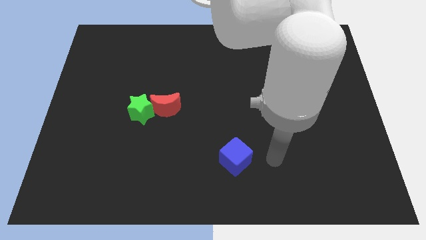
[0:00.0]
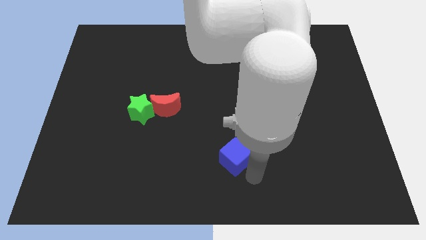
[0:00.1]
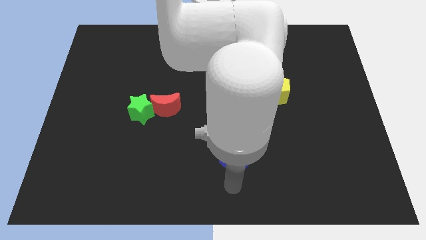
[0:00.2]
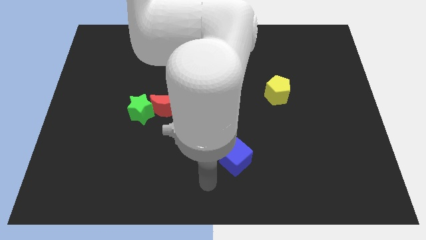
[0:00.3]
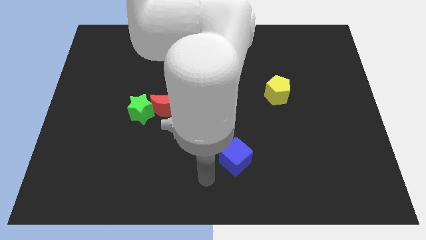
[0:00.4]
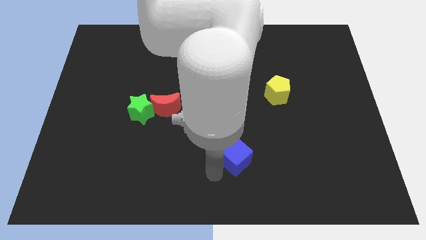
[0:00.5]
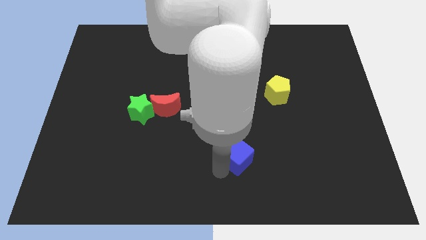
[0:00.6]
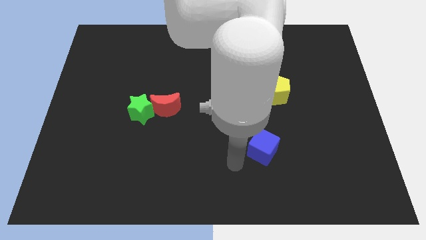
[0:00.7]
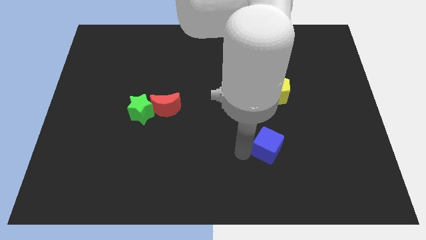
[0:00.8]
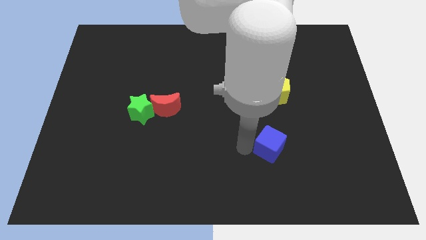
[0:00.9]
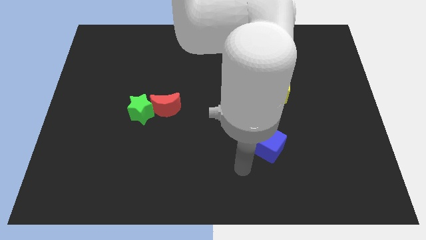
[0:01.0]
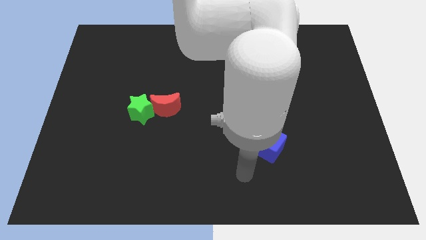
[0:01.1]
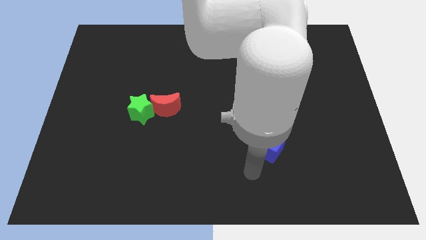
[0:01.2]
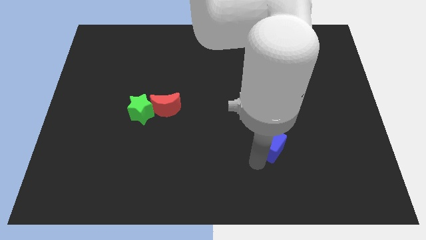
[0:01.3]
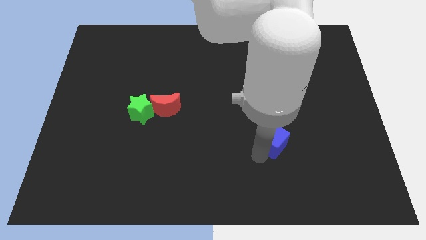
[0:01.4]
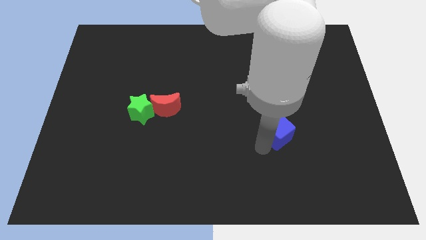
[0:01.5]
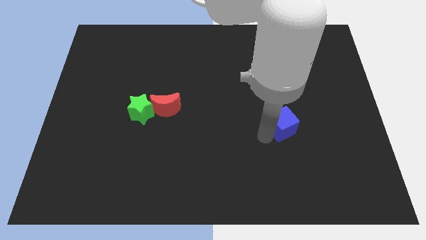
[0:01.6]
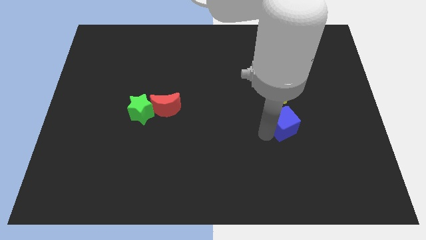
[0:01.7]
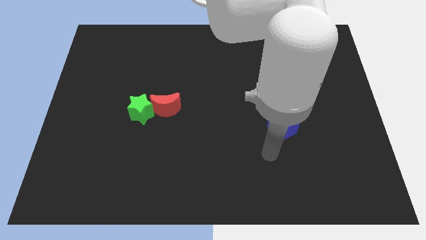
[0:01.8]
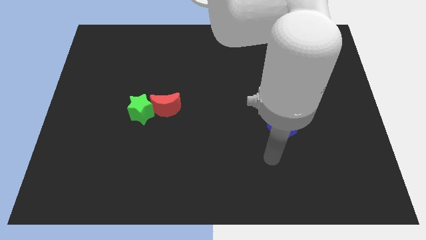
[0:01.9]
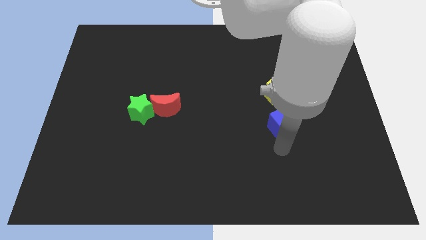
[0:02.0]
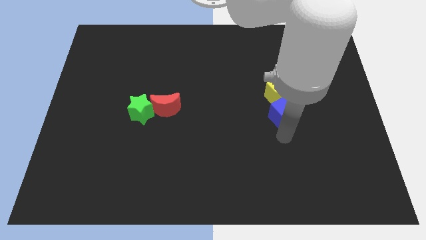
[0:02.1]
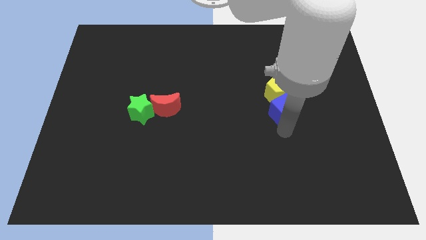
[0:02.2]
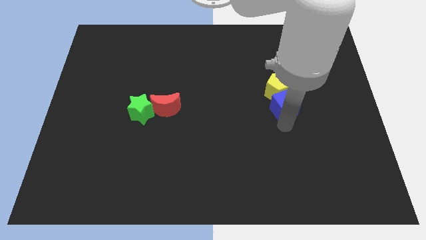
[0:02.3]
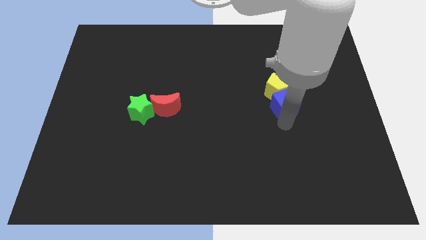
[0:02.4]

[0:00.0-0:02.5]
slide the blue block towards the yellow pentagon

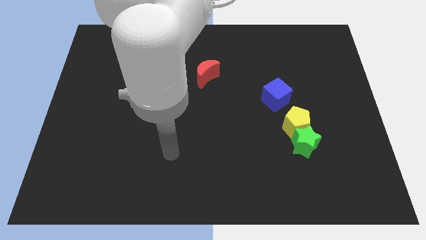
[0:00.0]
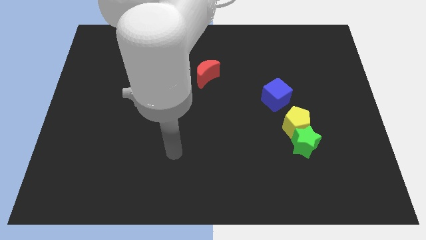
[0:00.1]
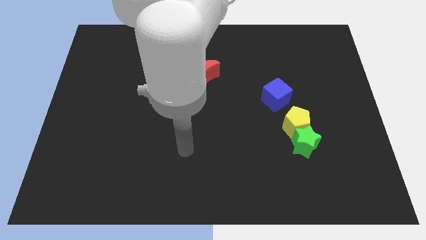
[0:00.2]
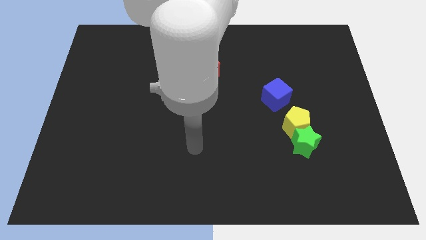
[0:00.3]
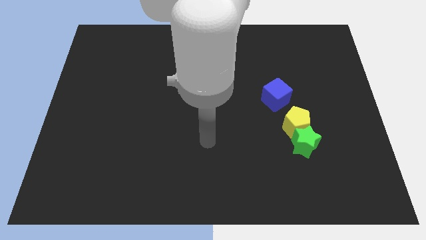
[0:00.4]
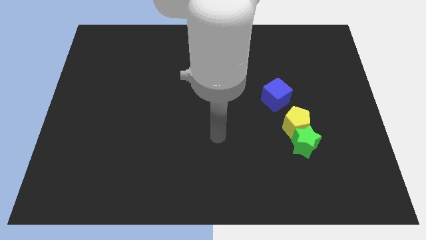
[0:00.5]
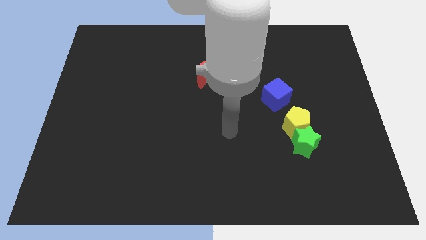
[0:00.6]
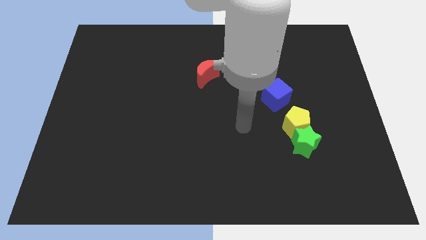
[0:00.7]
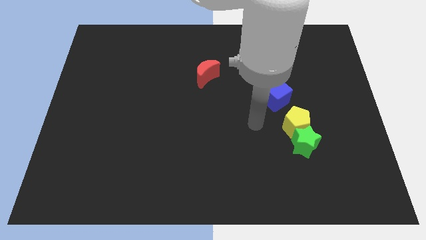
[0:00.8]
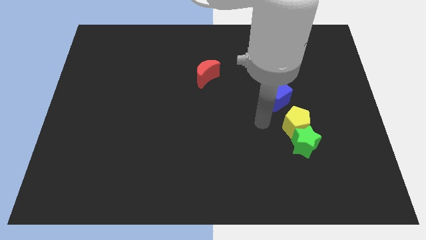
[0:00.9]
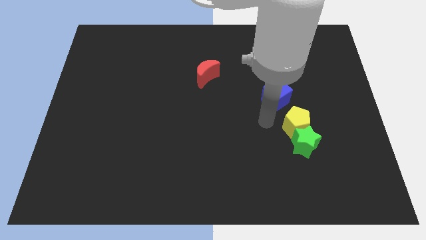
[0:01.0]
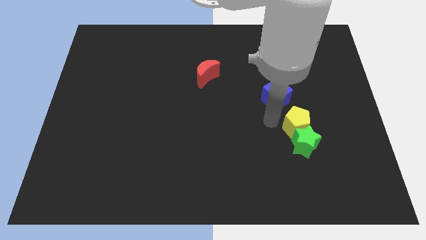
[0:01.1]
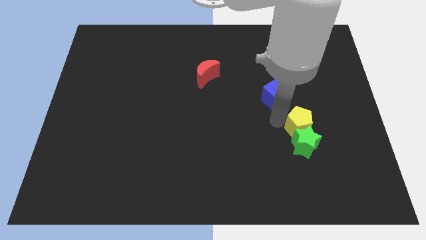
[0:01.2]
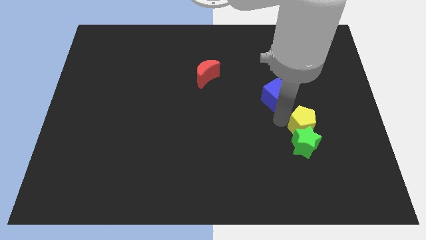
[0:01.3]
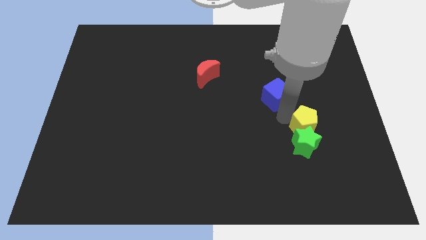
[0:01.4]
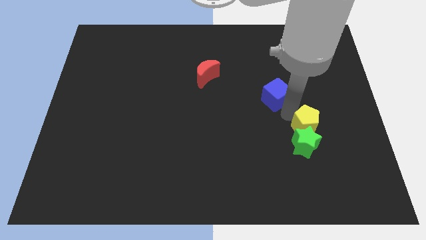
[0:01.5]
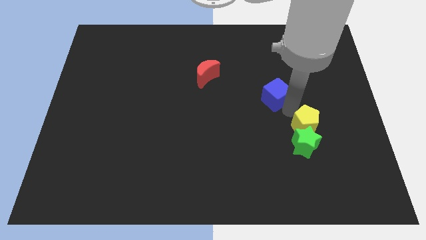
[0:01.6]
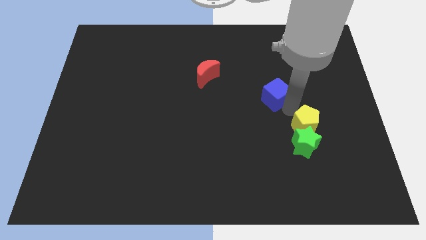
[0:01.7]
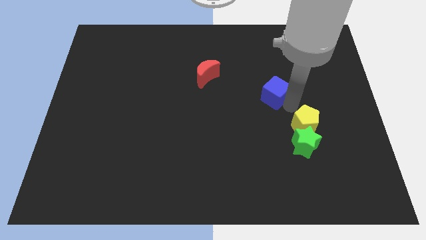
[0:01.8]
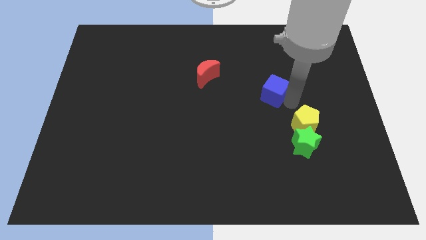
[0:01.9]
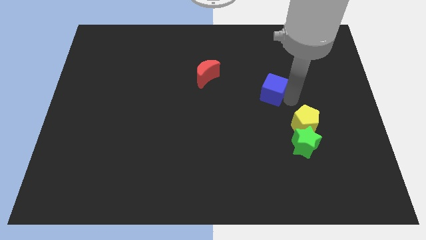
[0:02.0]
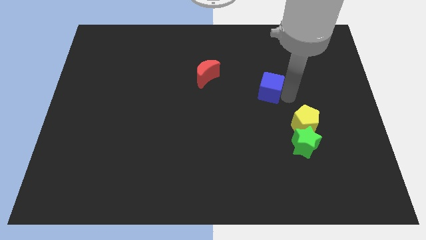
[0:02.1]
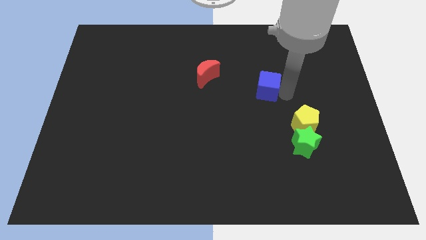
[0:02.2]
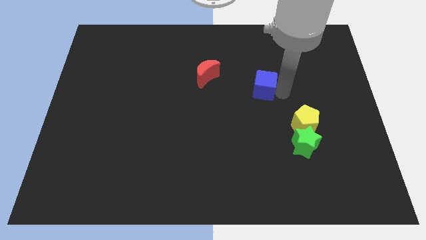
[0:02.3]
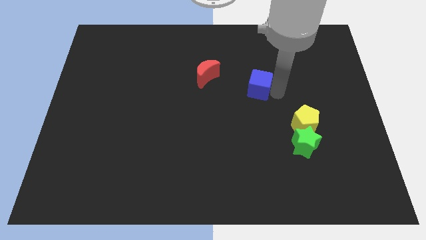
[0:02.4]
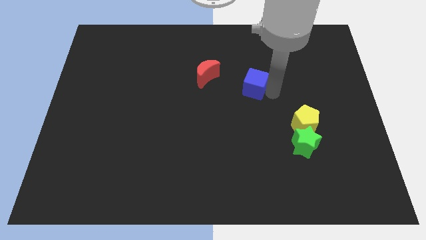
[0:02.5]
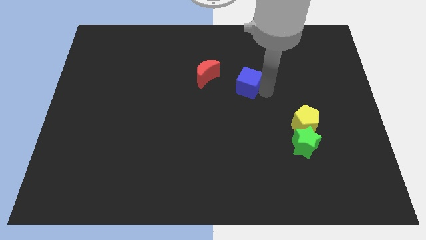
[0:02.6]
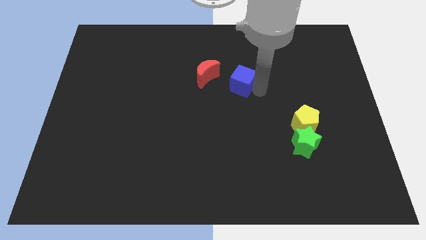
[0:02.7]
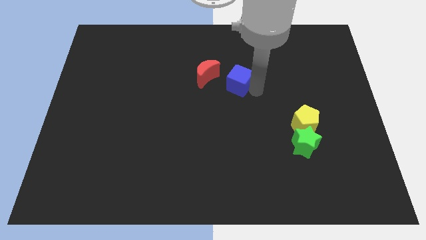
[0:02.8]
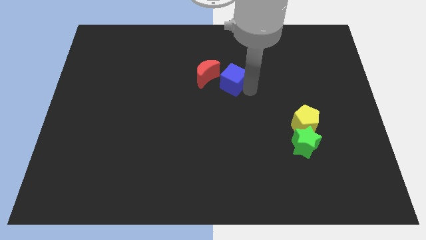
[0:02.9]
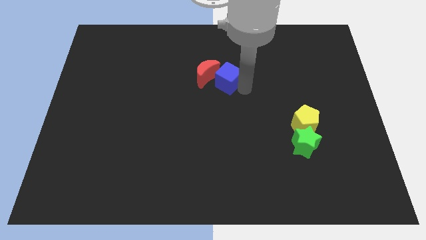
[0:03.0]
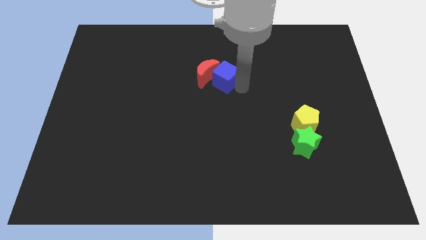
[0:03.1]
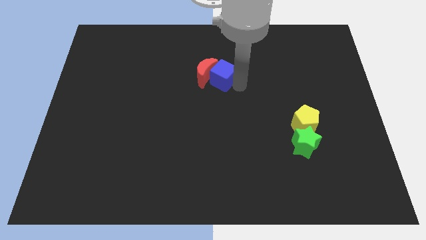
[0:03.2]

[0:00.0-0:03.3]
slide the blue cube next to the red moon

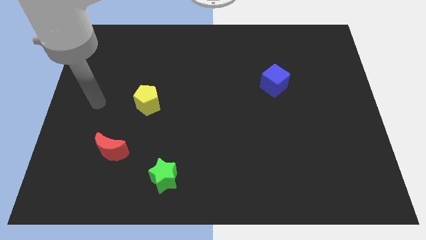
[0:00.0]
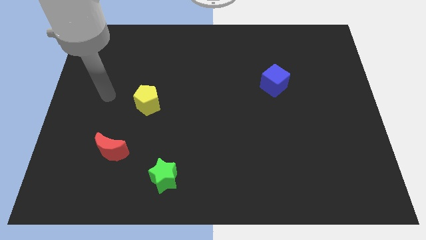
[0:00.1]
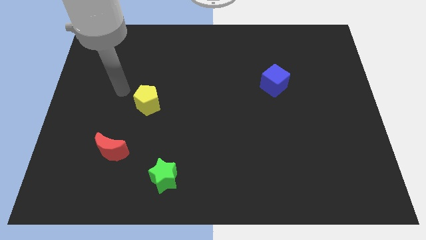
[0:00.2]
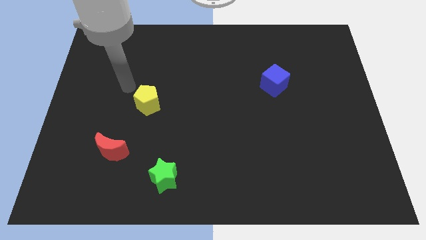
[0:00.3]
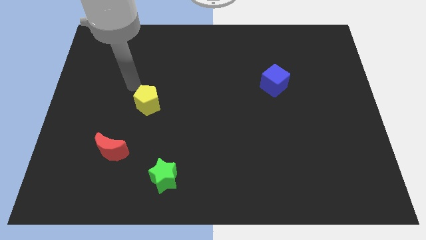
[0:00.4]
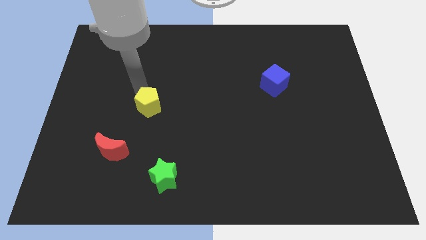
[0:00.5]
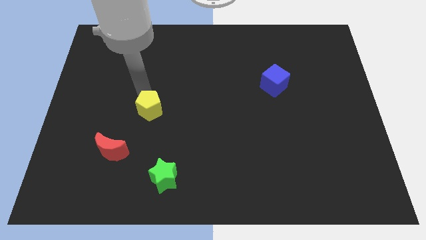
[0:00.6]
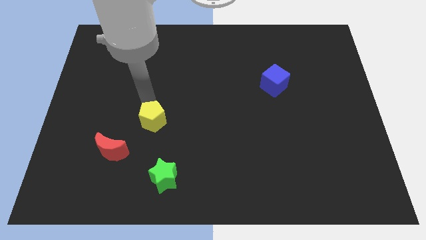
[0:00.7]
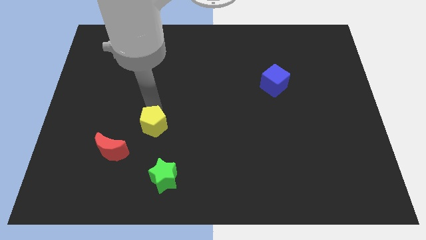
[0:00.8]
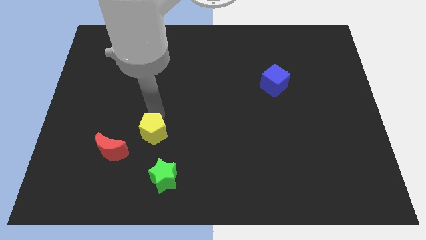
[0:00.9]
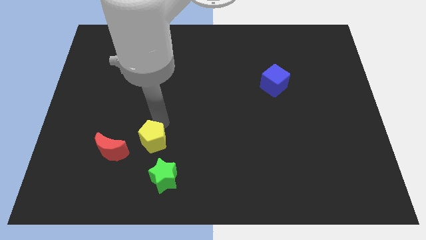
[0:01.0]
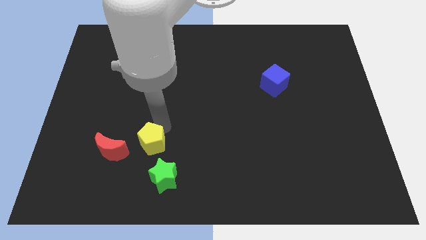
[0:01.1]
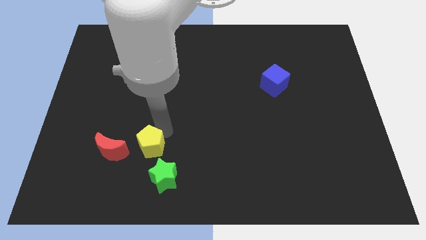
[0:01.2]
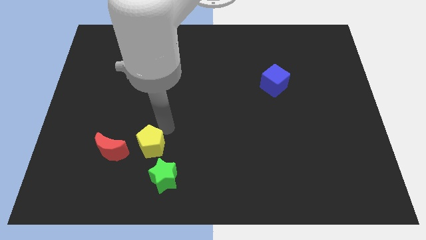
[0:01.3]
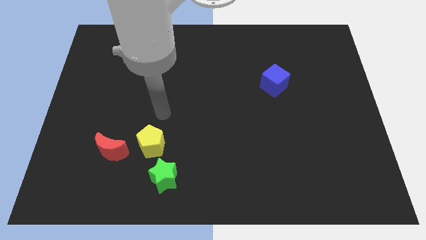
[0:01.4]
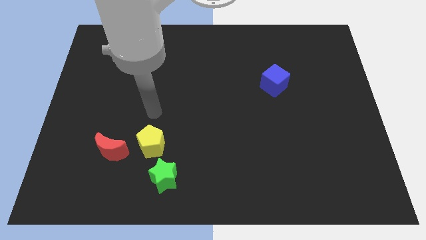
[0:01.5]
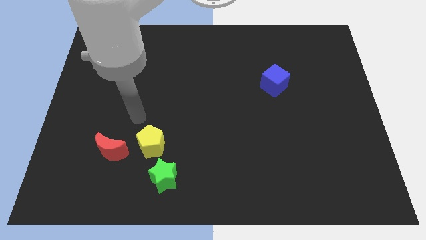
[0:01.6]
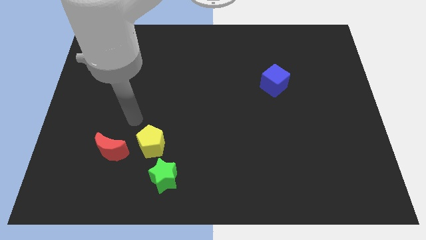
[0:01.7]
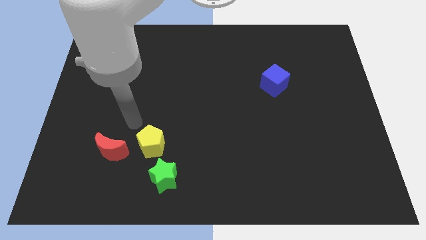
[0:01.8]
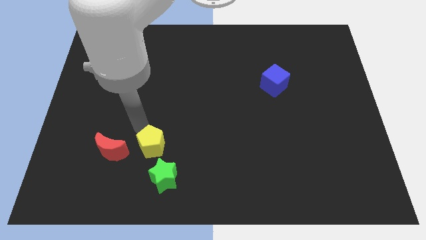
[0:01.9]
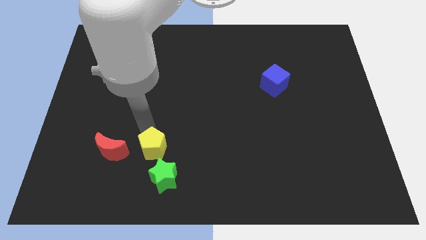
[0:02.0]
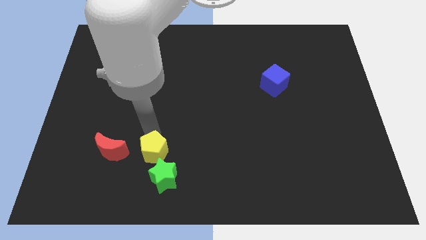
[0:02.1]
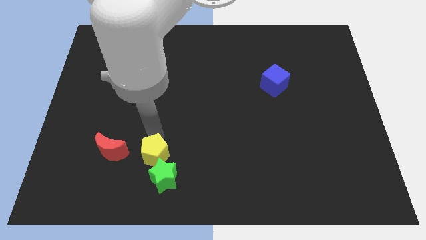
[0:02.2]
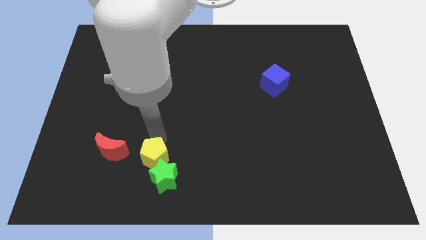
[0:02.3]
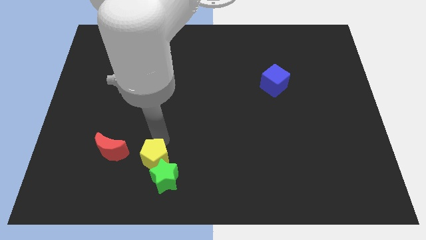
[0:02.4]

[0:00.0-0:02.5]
put the pentagon close to the green block
